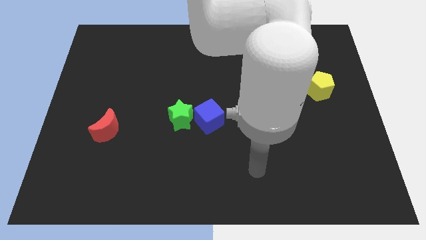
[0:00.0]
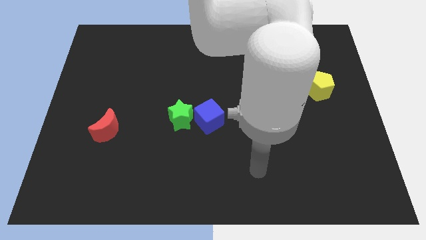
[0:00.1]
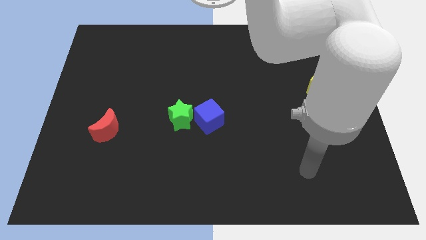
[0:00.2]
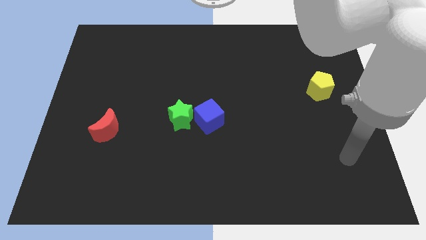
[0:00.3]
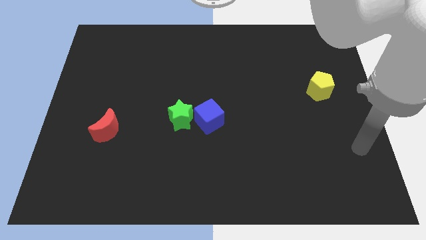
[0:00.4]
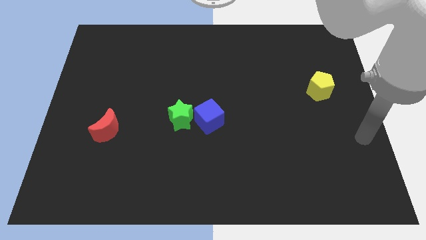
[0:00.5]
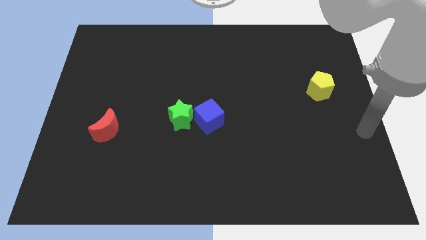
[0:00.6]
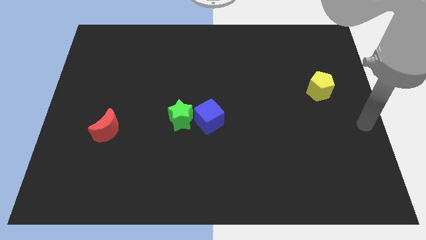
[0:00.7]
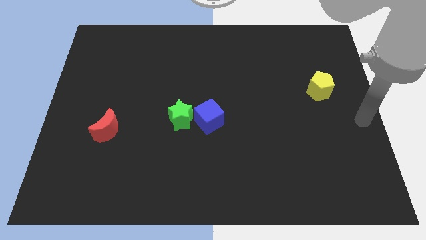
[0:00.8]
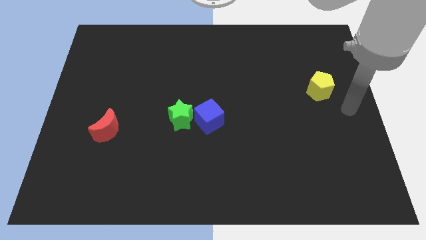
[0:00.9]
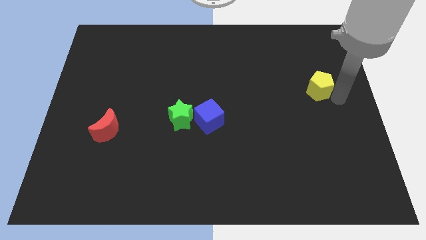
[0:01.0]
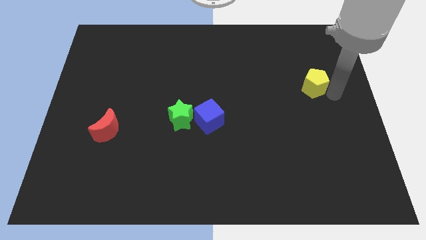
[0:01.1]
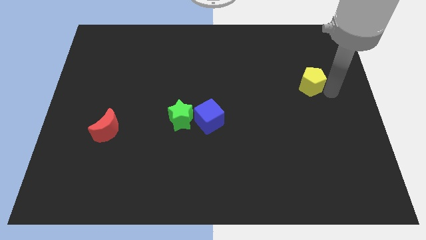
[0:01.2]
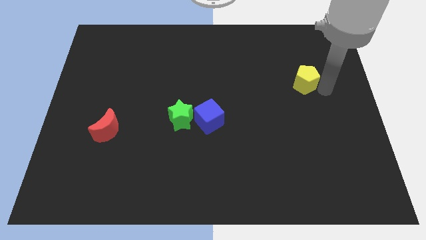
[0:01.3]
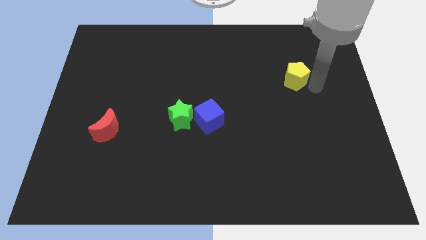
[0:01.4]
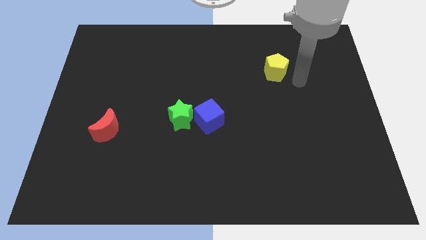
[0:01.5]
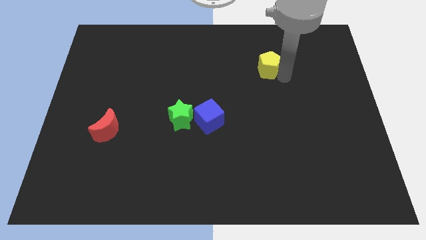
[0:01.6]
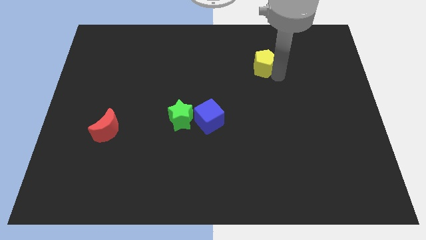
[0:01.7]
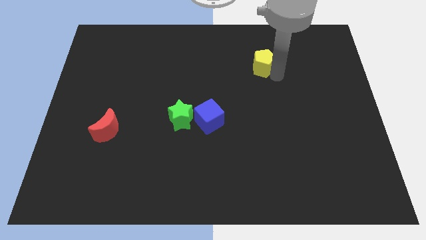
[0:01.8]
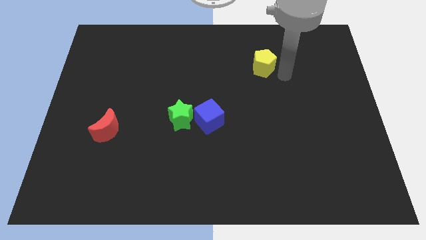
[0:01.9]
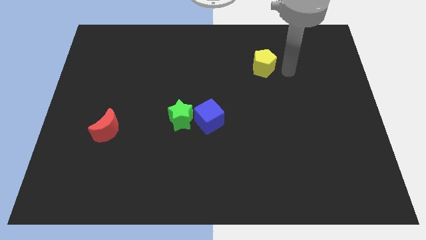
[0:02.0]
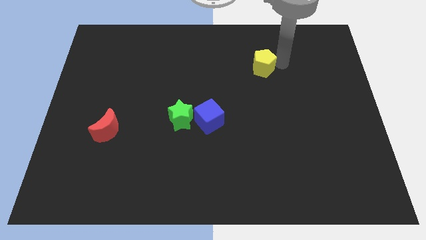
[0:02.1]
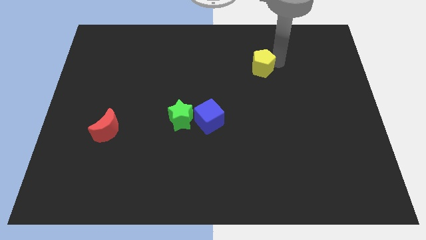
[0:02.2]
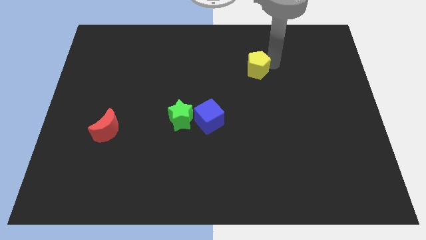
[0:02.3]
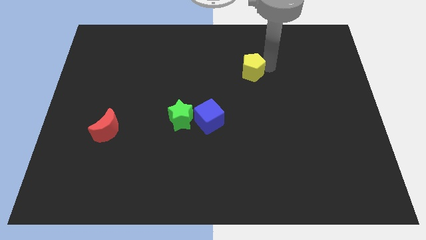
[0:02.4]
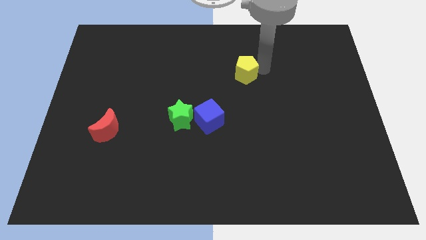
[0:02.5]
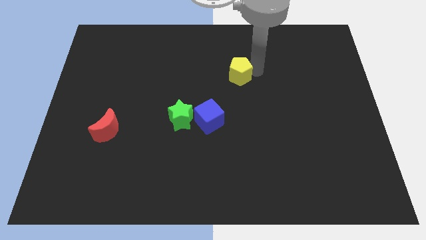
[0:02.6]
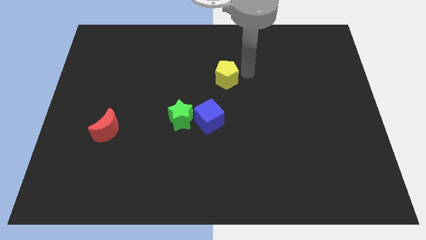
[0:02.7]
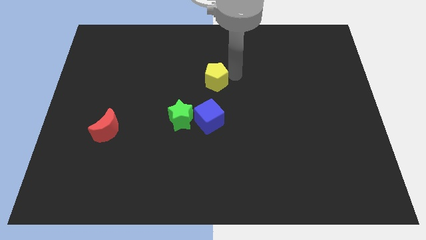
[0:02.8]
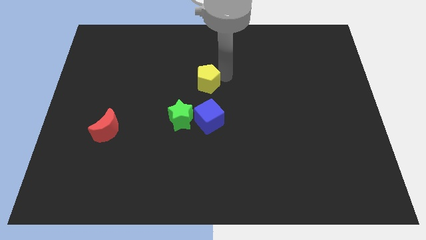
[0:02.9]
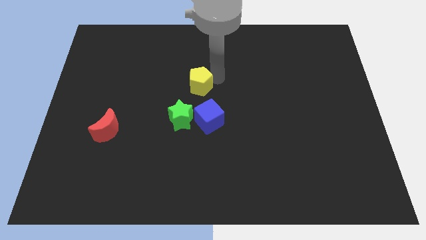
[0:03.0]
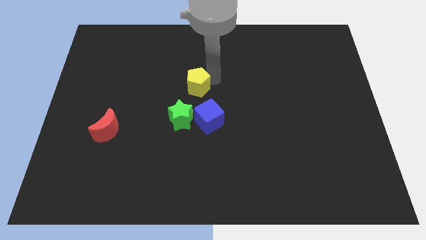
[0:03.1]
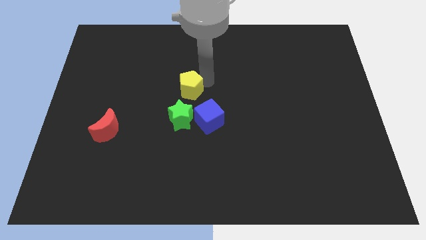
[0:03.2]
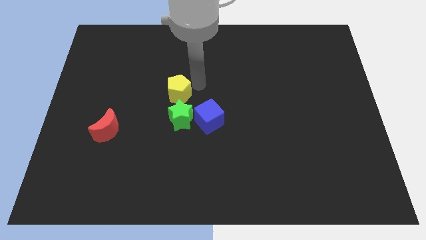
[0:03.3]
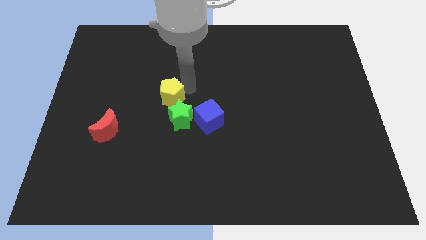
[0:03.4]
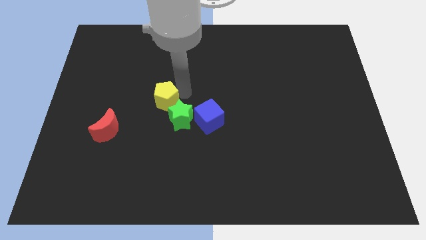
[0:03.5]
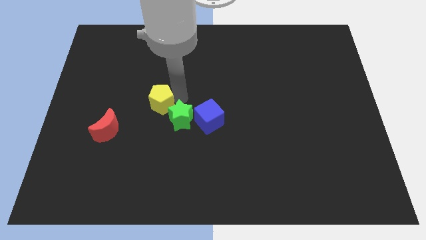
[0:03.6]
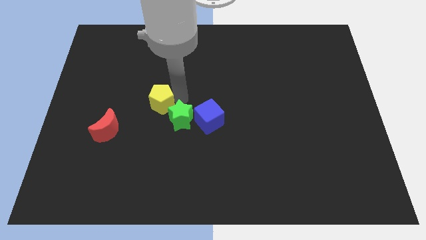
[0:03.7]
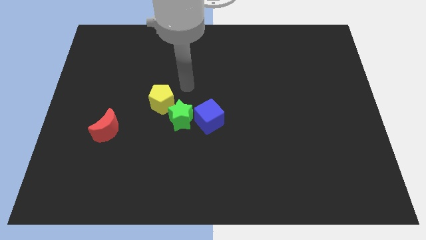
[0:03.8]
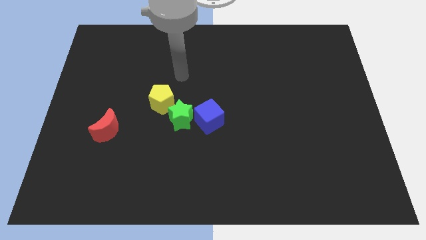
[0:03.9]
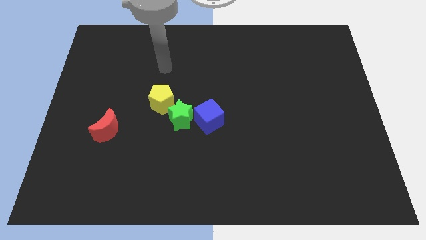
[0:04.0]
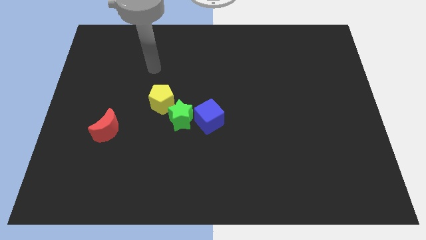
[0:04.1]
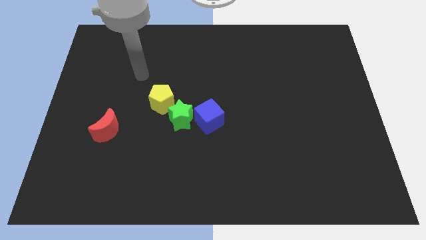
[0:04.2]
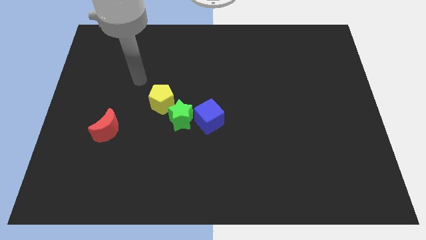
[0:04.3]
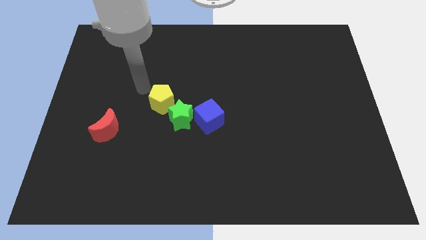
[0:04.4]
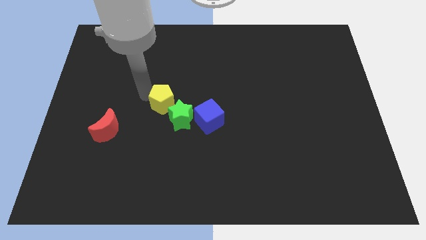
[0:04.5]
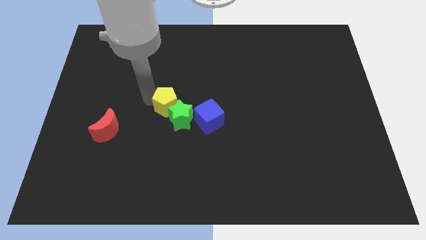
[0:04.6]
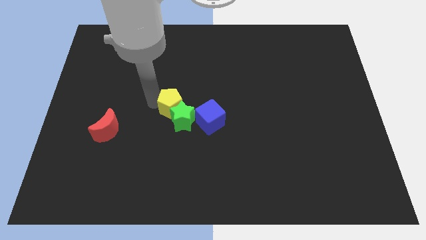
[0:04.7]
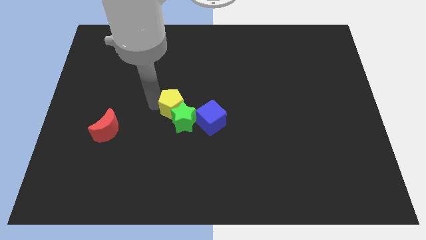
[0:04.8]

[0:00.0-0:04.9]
move the yellow block to the green star

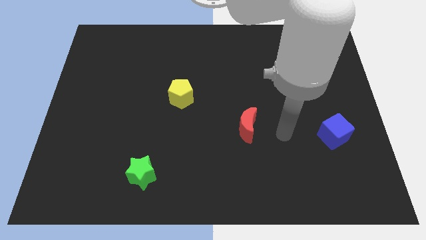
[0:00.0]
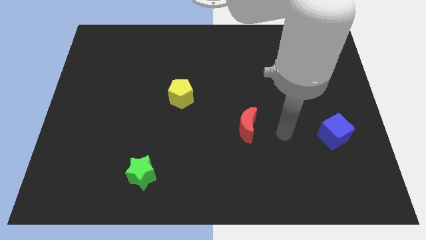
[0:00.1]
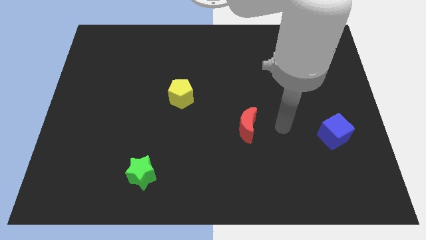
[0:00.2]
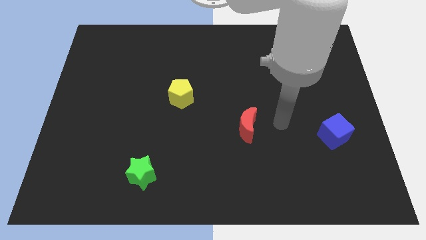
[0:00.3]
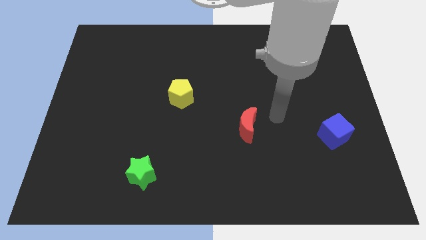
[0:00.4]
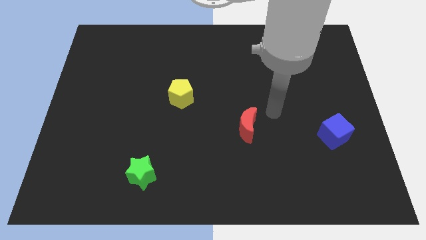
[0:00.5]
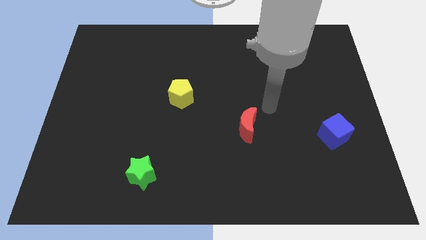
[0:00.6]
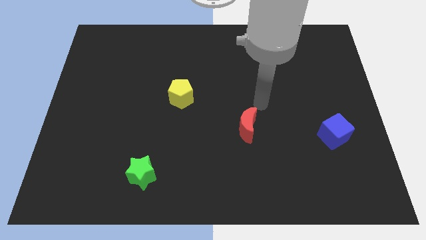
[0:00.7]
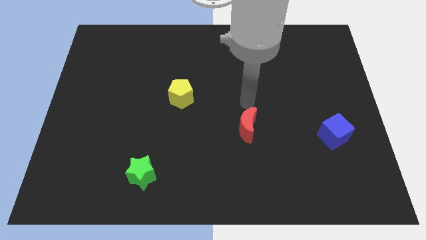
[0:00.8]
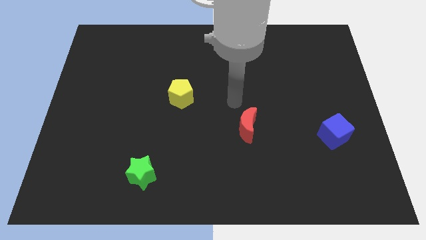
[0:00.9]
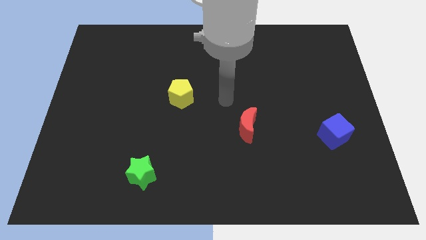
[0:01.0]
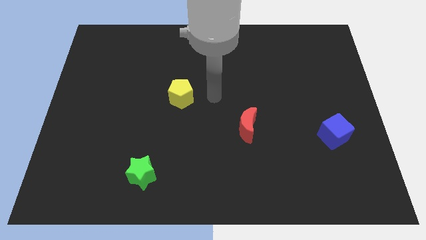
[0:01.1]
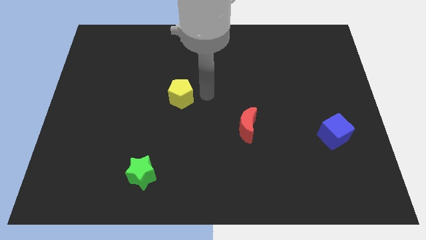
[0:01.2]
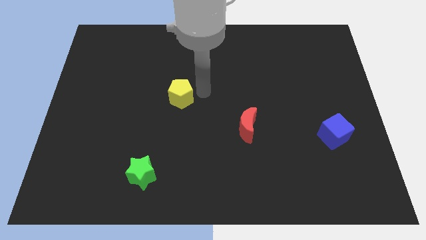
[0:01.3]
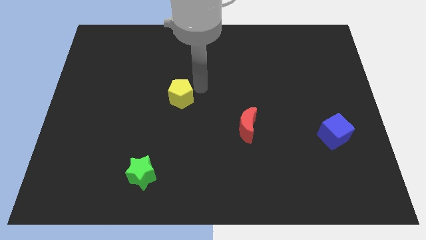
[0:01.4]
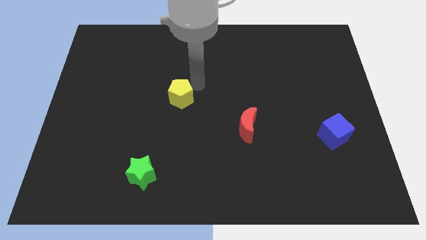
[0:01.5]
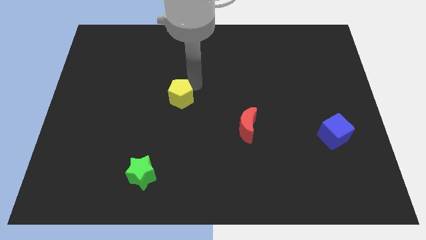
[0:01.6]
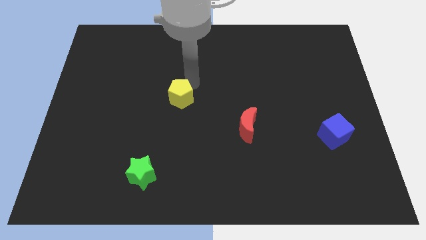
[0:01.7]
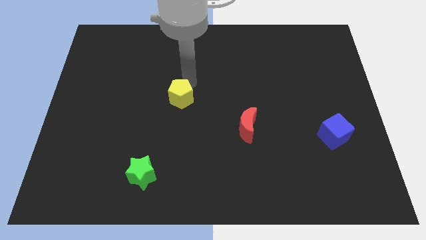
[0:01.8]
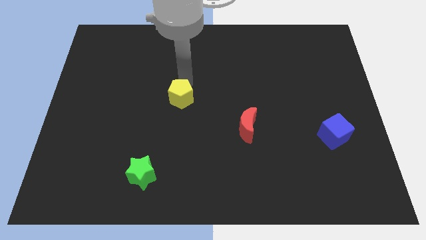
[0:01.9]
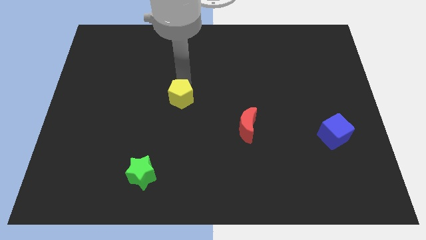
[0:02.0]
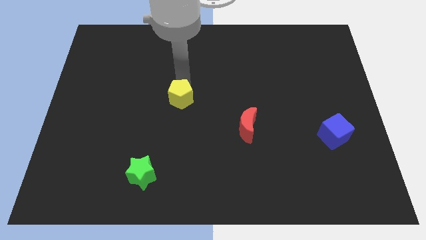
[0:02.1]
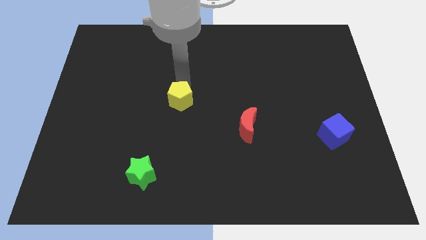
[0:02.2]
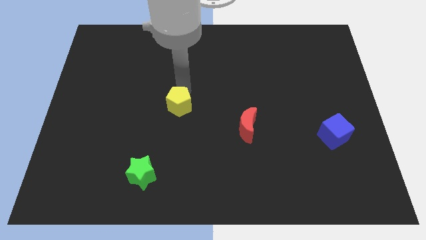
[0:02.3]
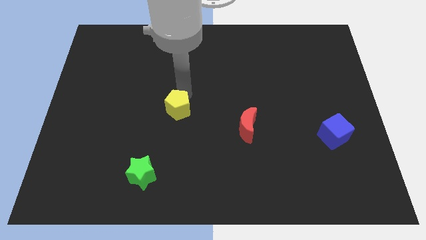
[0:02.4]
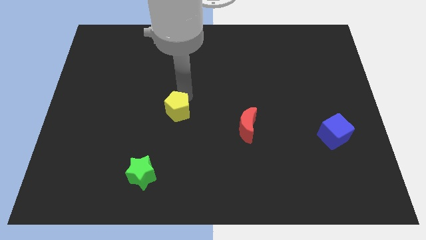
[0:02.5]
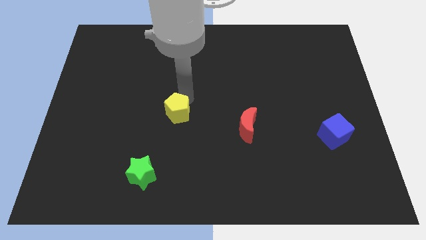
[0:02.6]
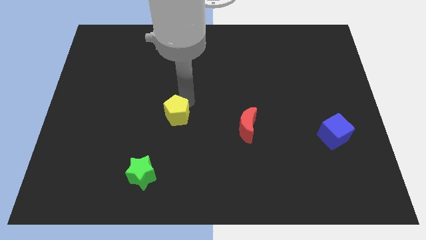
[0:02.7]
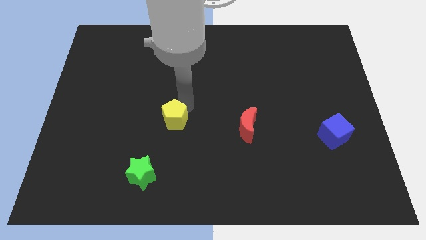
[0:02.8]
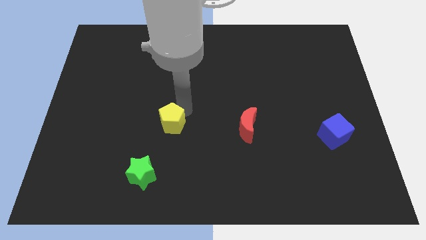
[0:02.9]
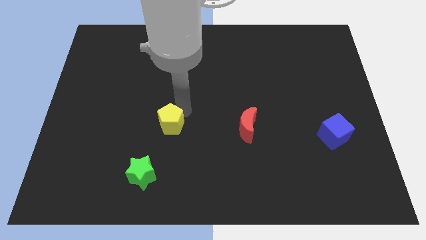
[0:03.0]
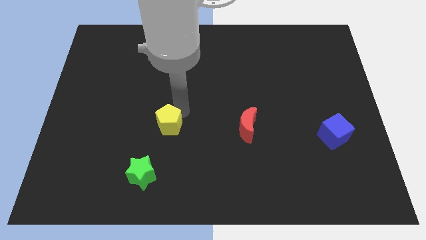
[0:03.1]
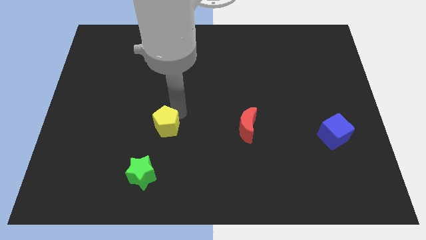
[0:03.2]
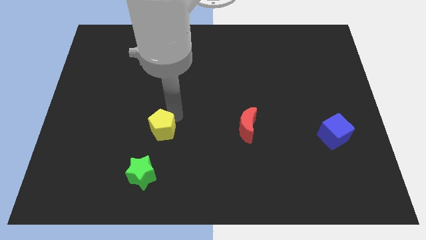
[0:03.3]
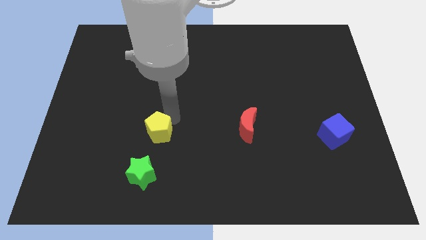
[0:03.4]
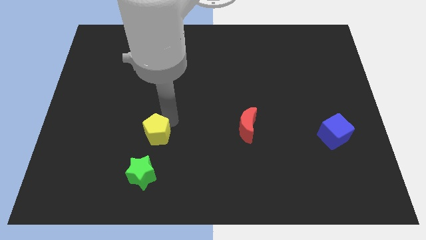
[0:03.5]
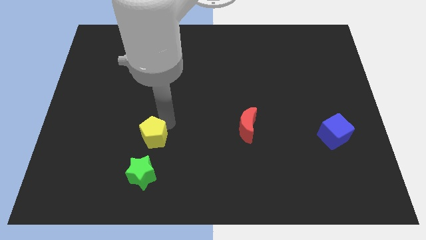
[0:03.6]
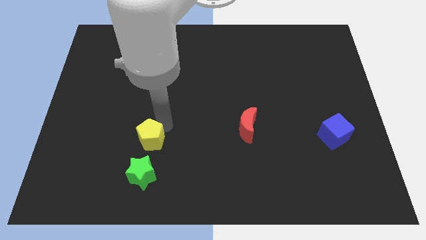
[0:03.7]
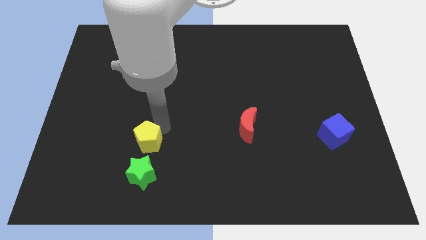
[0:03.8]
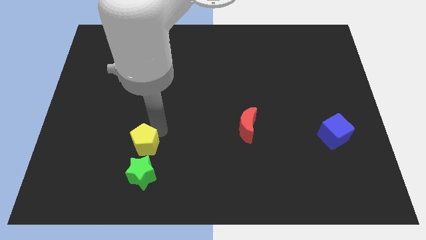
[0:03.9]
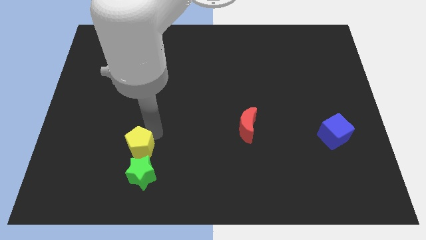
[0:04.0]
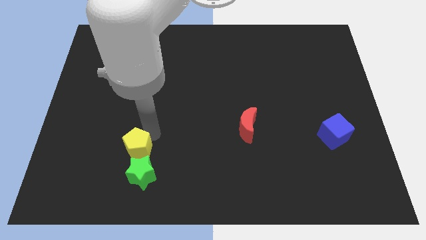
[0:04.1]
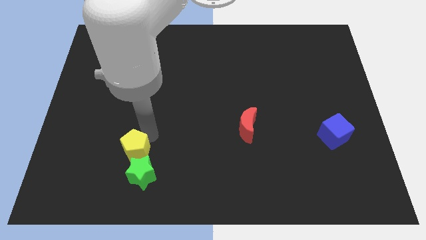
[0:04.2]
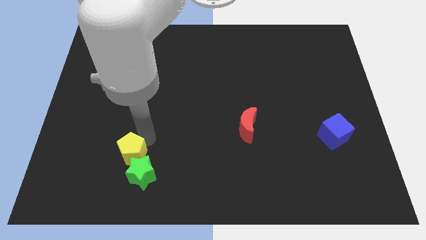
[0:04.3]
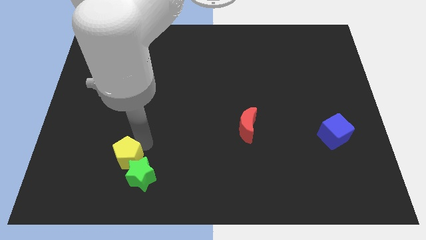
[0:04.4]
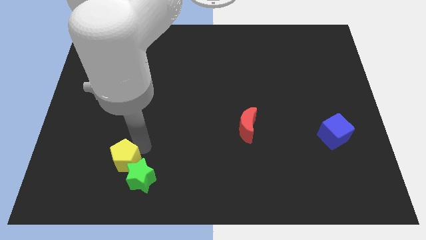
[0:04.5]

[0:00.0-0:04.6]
put the yellow block to the green block
